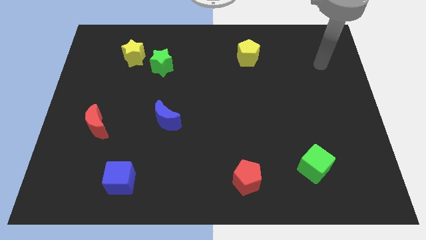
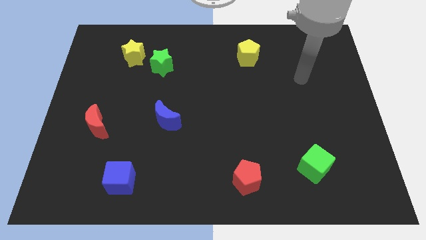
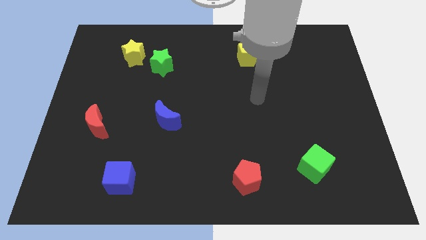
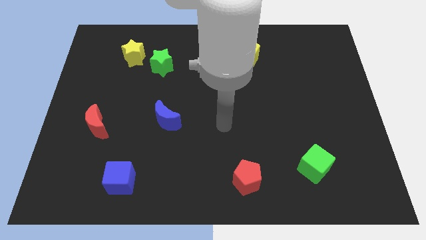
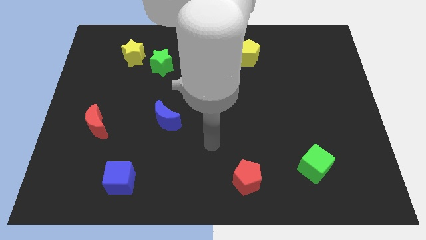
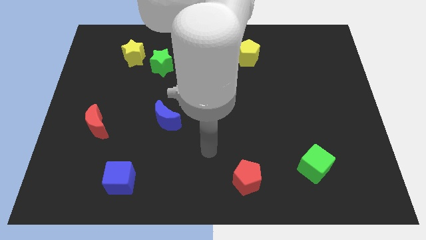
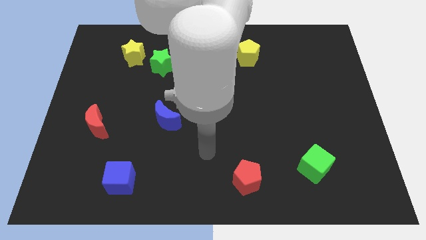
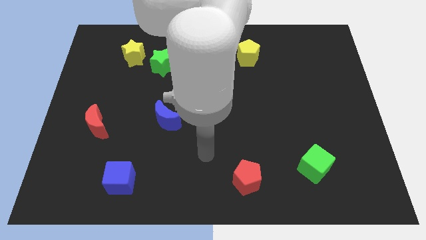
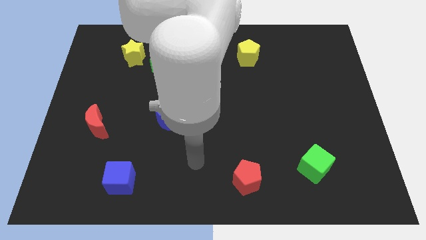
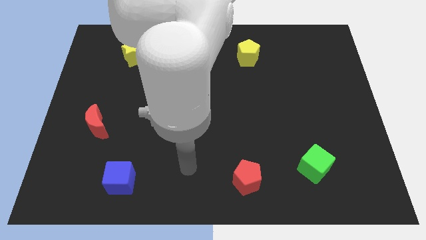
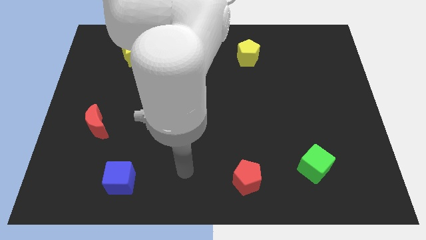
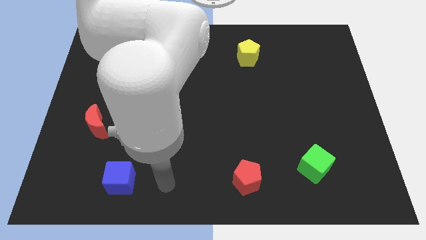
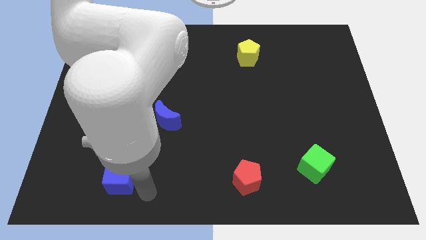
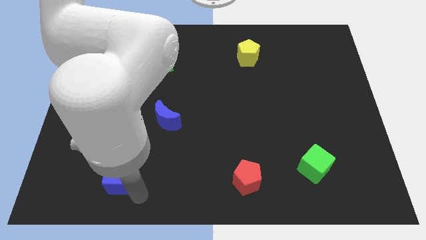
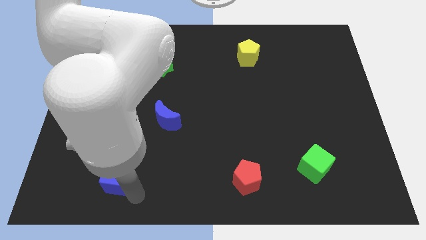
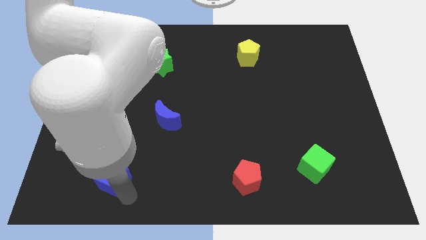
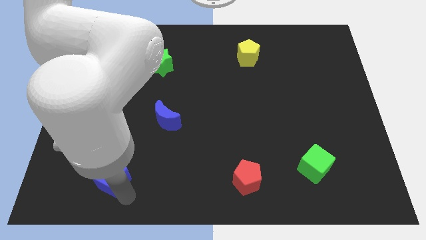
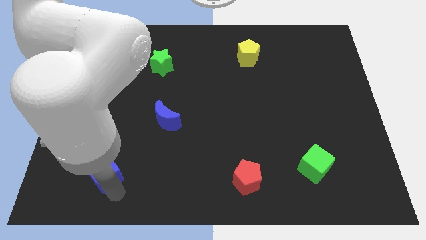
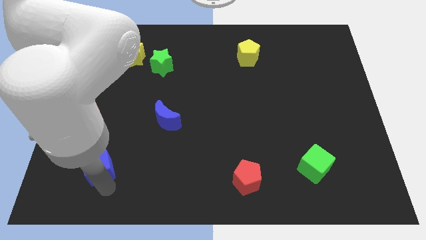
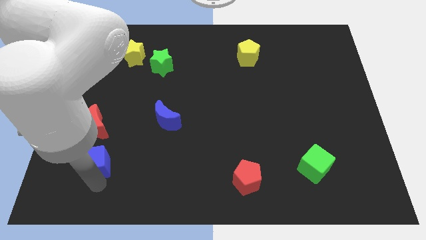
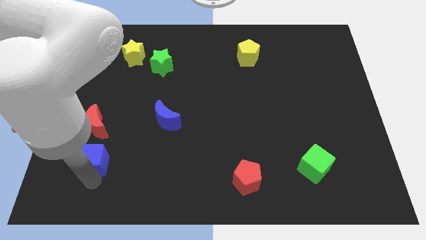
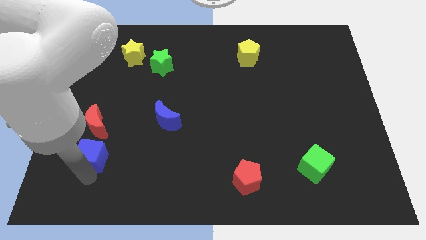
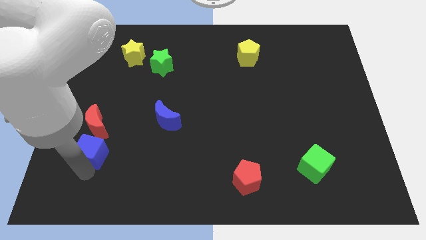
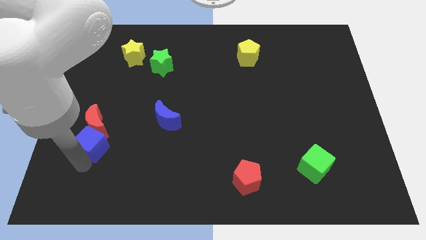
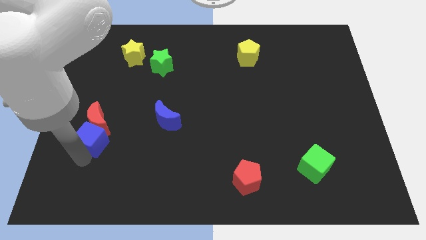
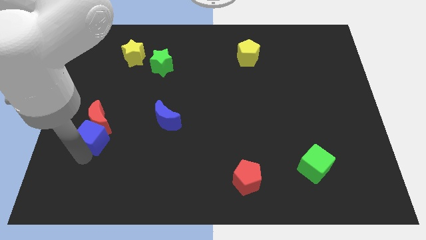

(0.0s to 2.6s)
put the blue cube to the red moon

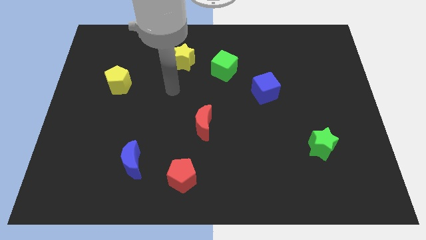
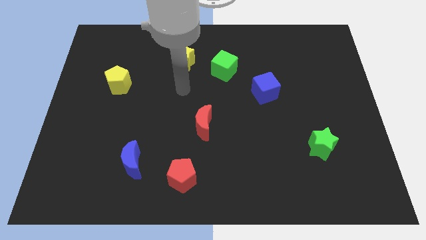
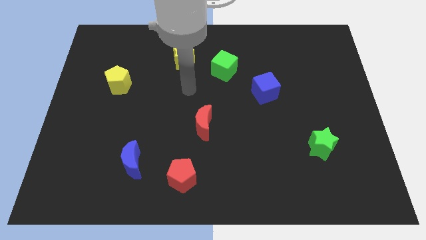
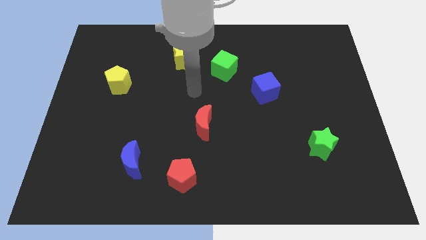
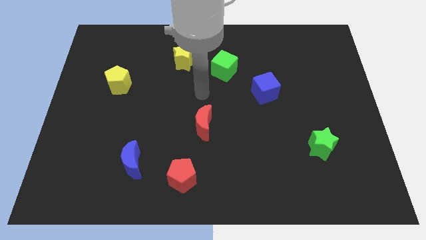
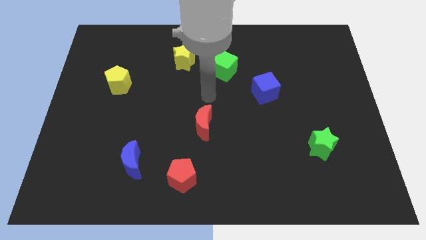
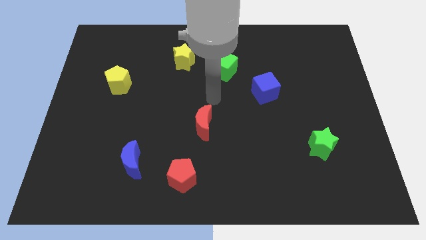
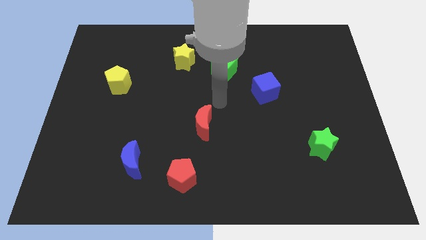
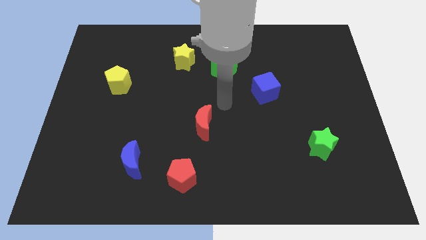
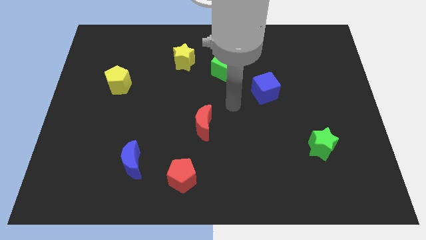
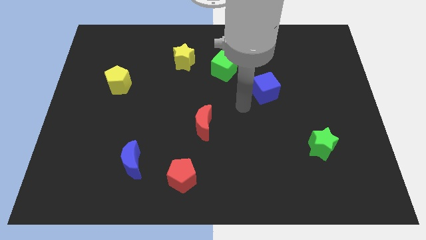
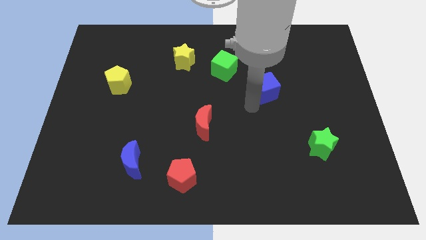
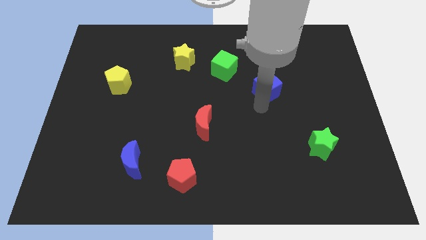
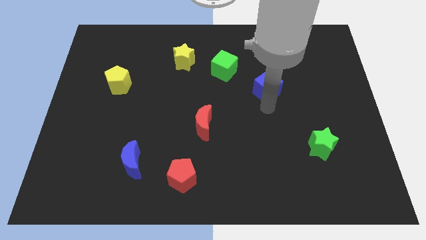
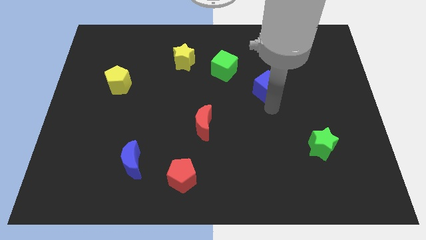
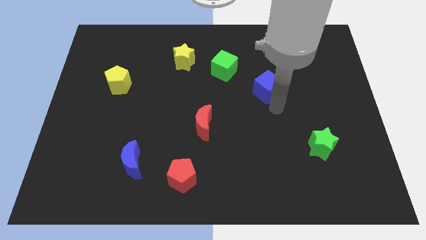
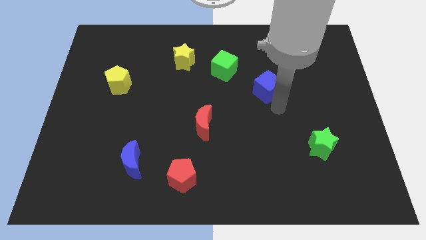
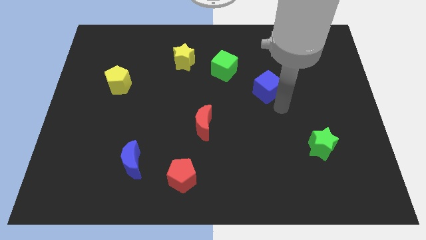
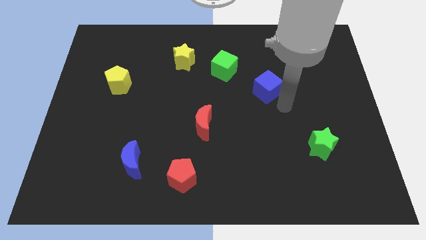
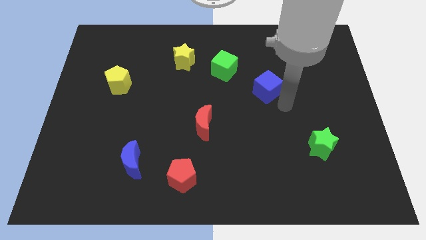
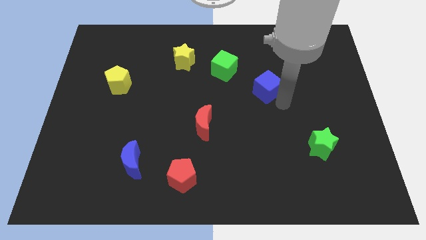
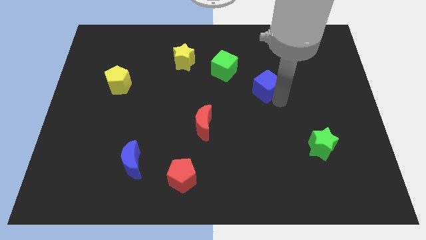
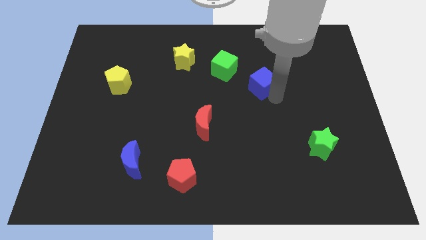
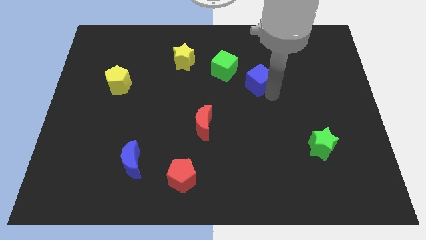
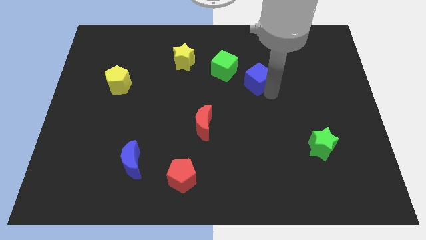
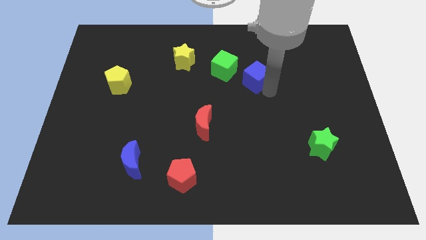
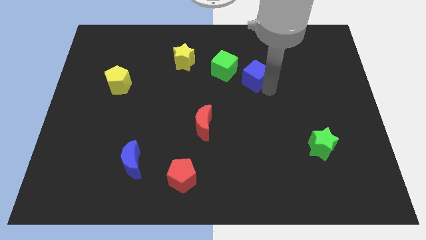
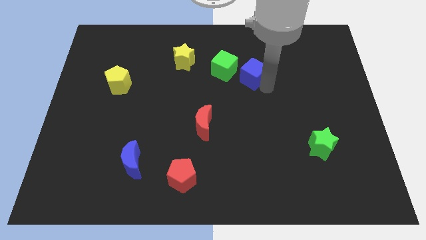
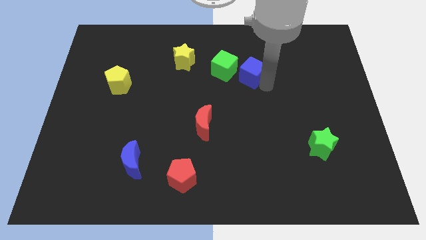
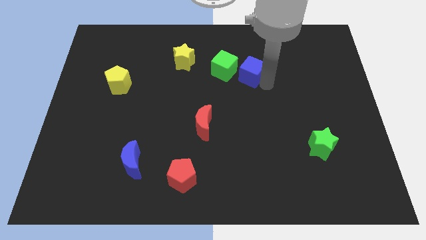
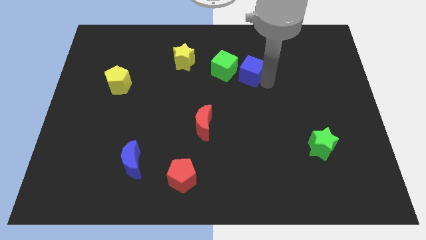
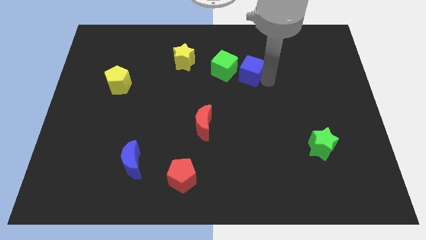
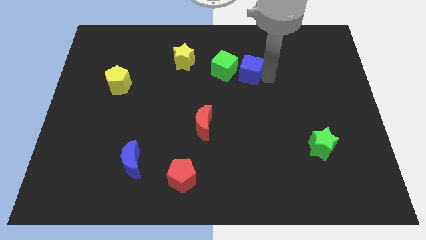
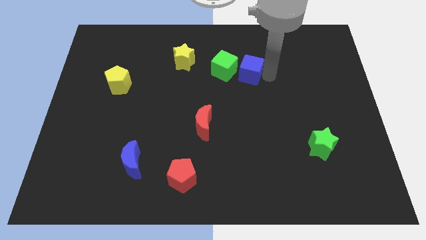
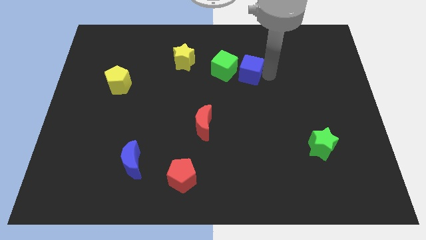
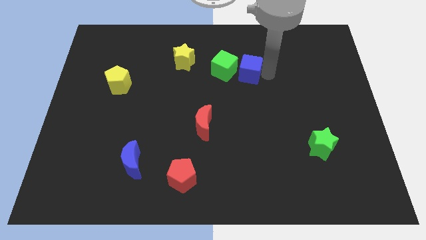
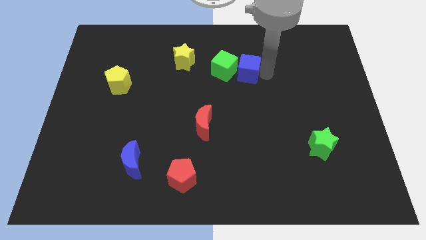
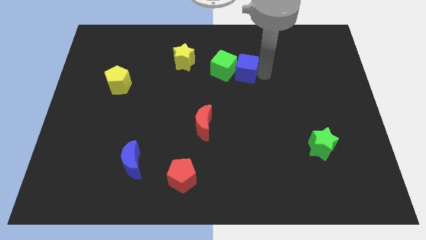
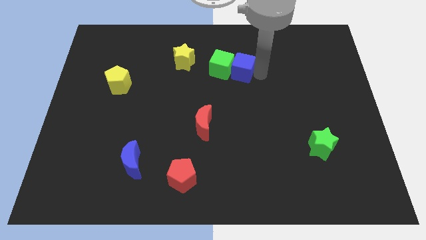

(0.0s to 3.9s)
move the blue cube close to the green cube

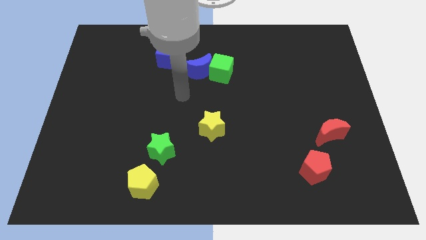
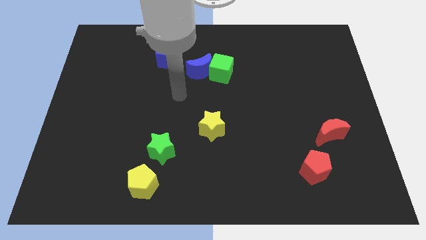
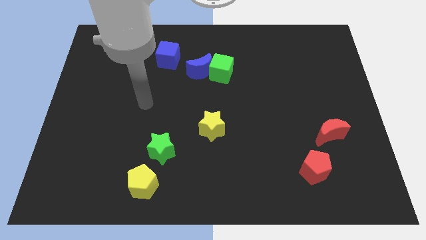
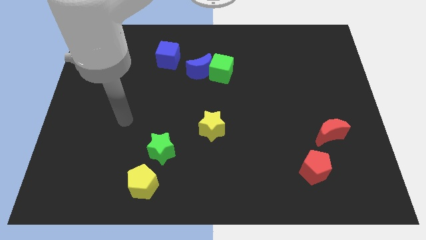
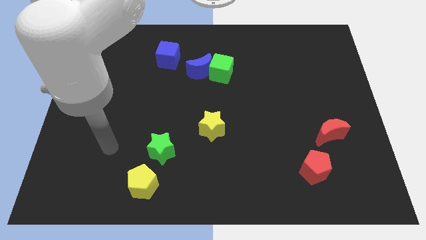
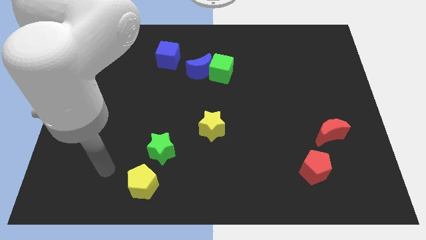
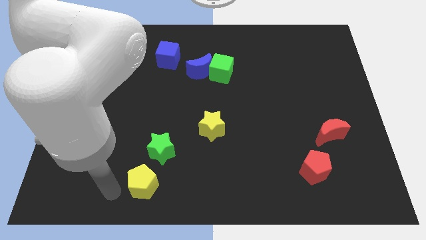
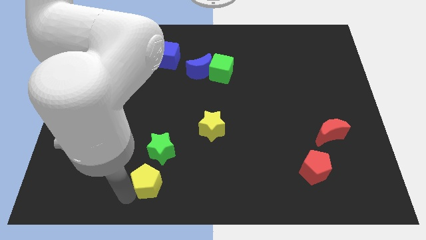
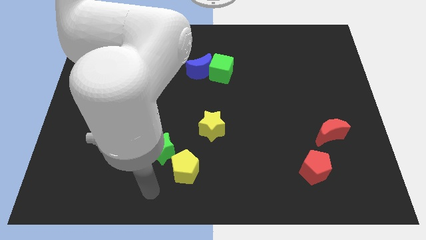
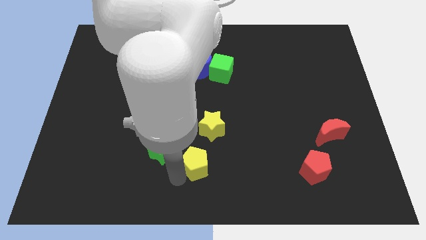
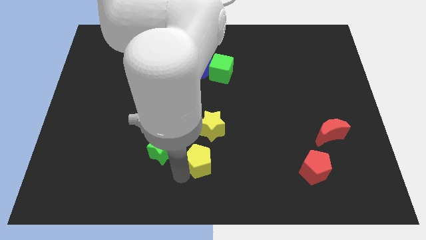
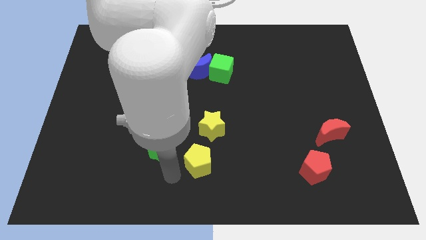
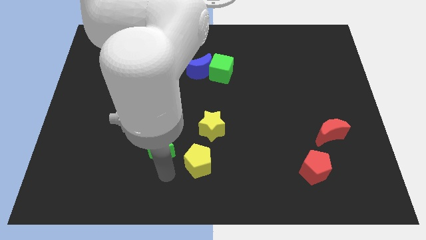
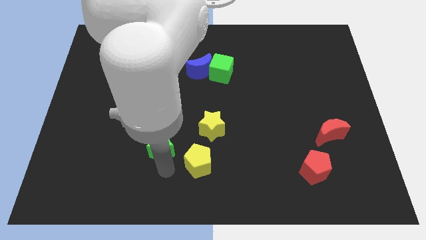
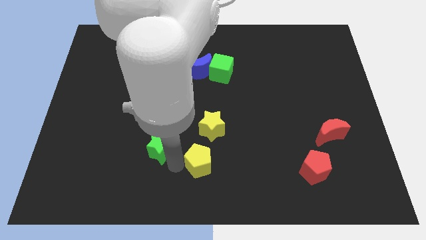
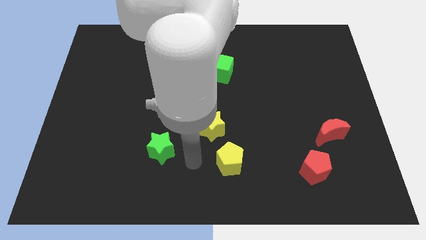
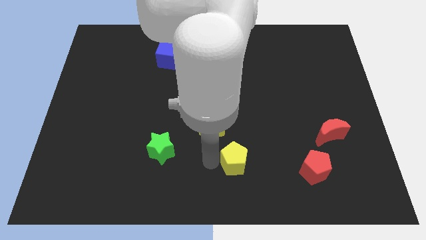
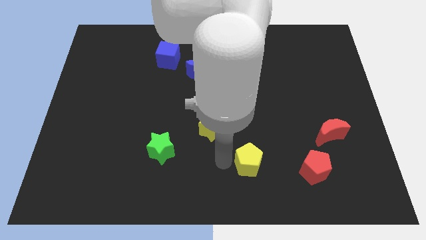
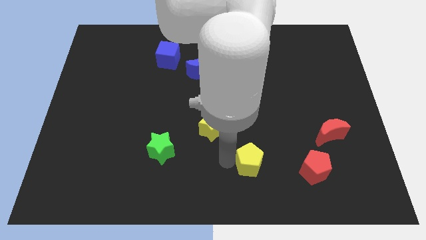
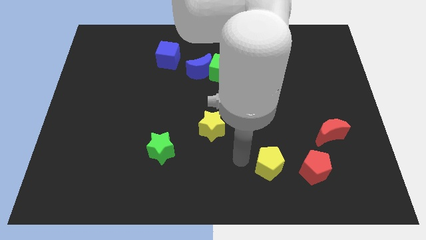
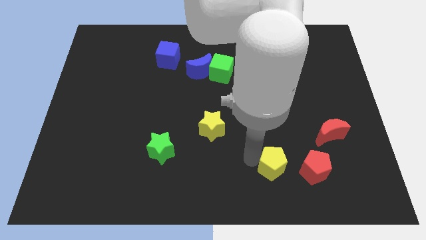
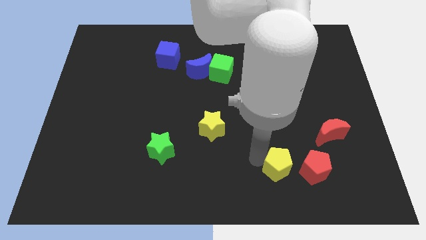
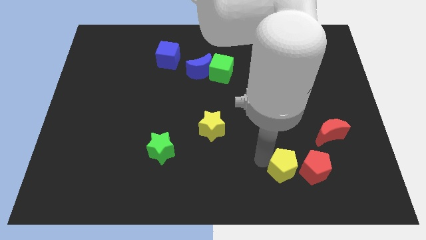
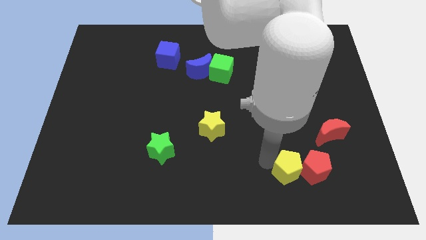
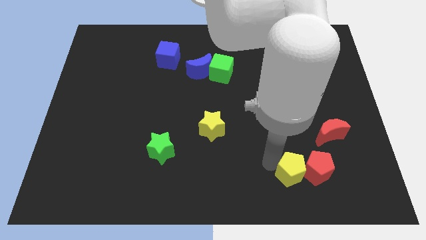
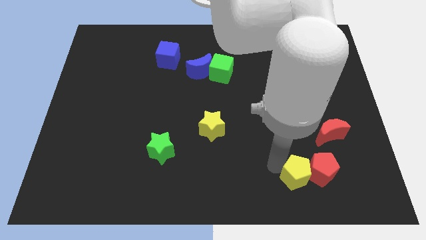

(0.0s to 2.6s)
push the yellow pentagon next to the red pentagon
